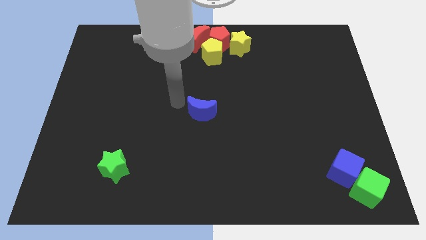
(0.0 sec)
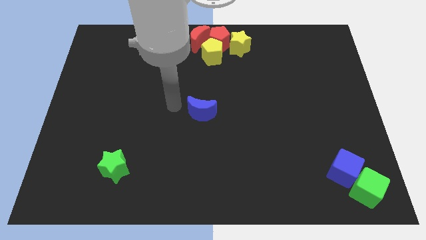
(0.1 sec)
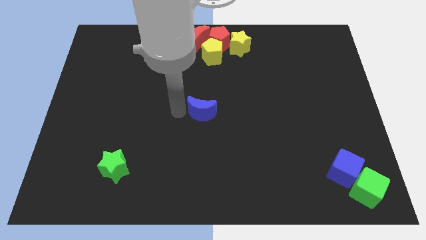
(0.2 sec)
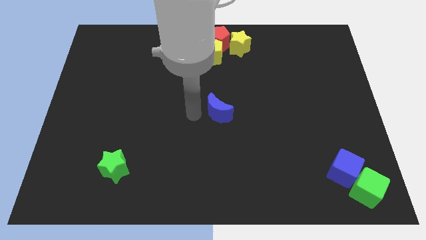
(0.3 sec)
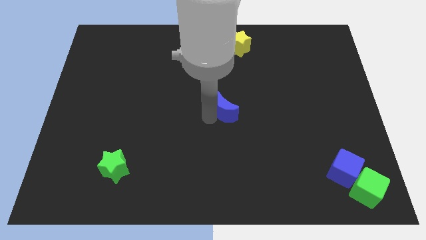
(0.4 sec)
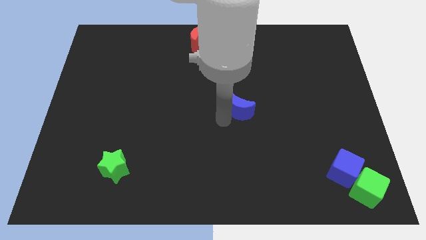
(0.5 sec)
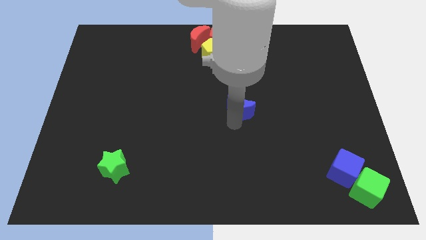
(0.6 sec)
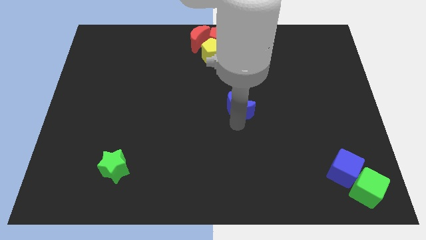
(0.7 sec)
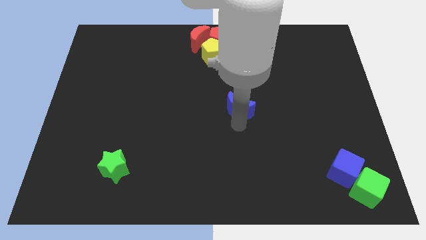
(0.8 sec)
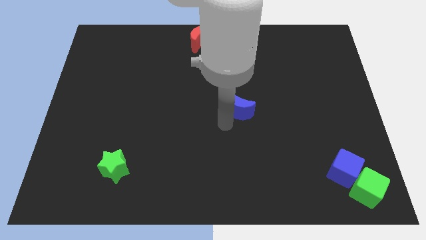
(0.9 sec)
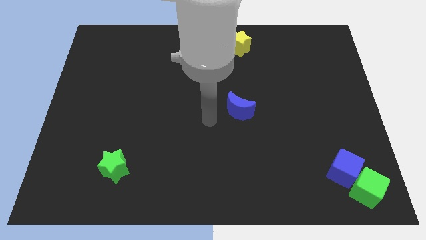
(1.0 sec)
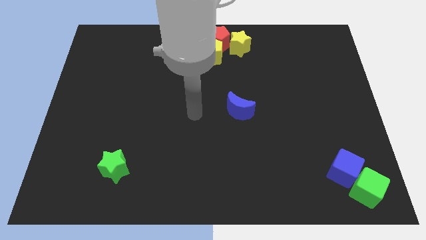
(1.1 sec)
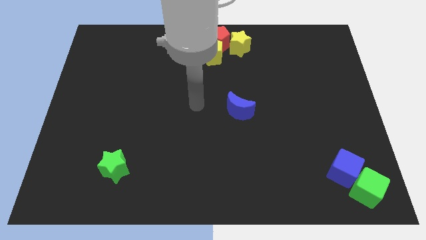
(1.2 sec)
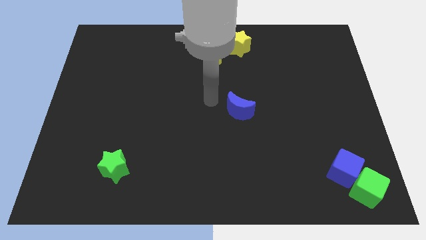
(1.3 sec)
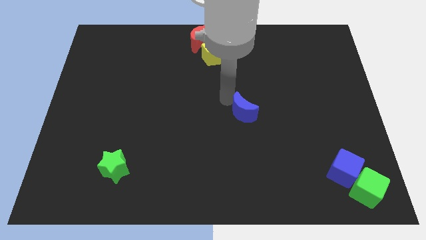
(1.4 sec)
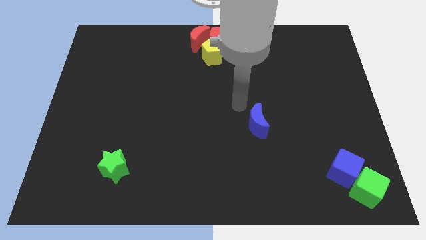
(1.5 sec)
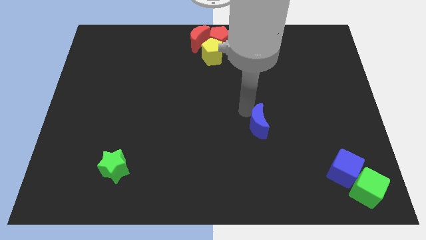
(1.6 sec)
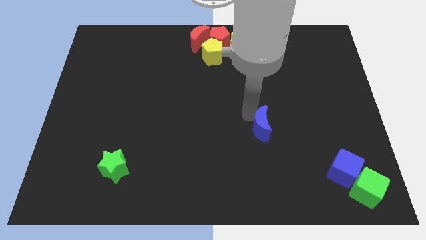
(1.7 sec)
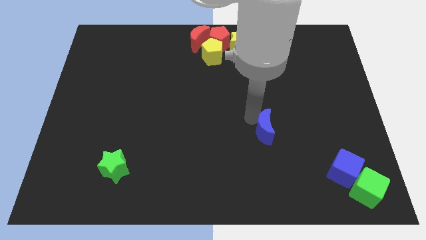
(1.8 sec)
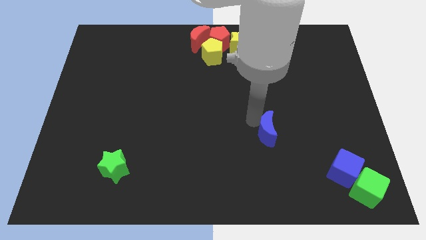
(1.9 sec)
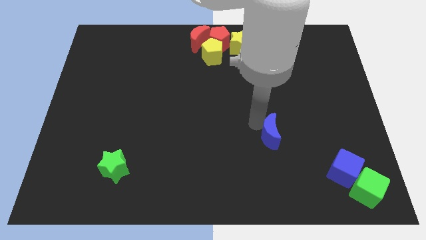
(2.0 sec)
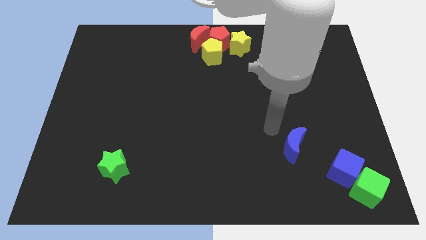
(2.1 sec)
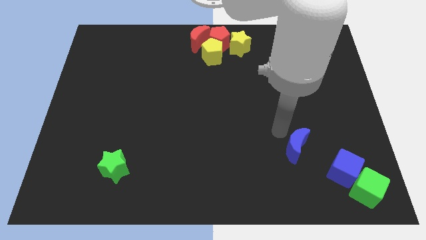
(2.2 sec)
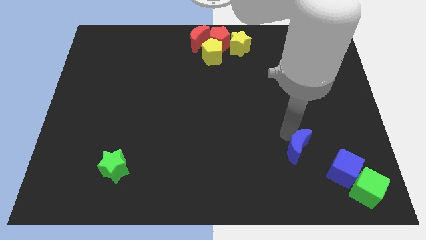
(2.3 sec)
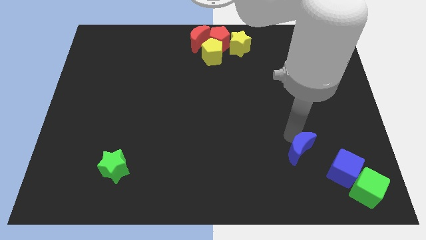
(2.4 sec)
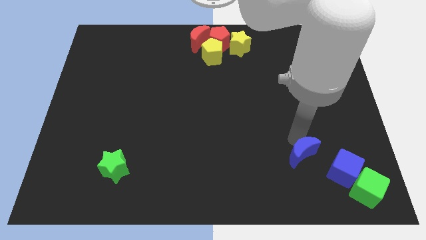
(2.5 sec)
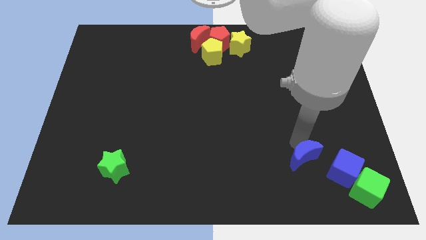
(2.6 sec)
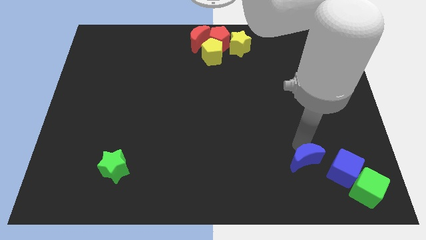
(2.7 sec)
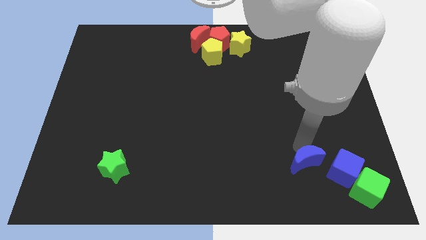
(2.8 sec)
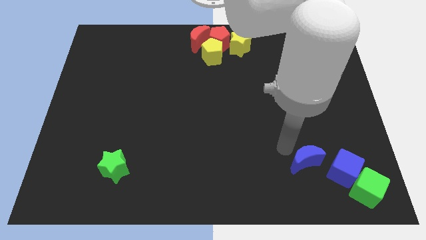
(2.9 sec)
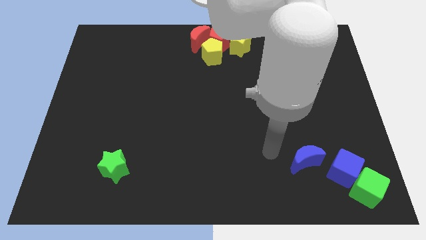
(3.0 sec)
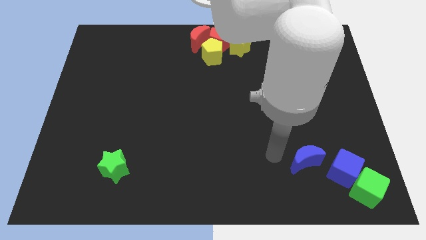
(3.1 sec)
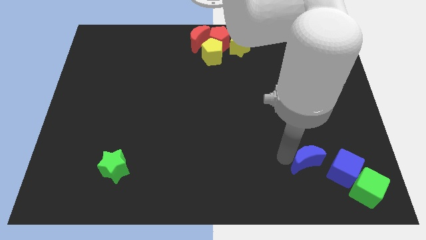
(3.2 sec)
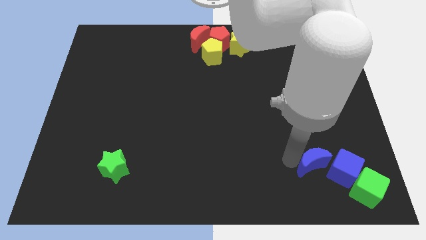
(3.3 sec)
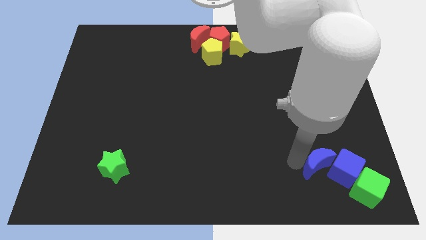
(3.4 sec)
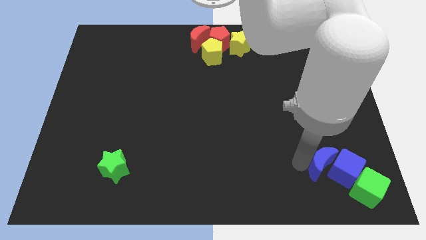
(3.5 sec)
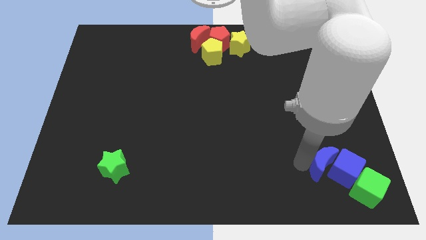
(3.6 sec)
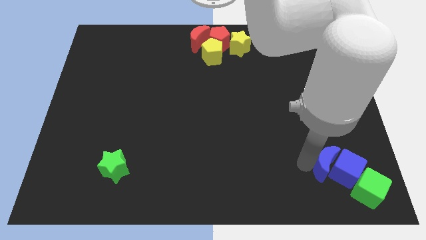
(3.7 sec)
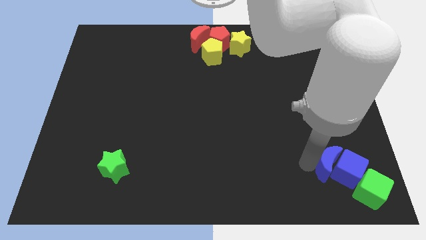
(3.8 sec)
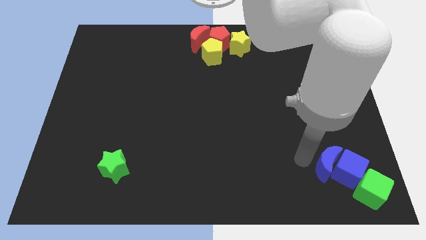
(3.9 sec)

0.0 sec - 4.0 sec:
slide the blue moon into the blue cube

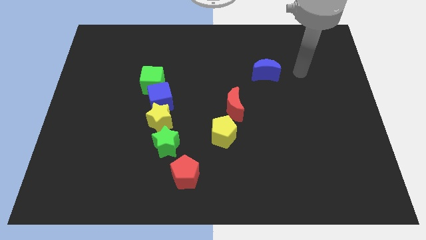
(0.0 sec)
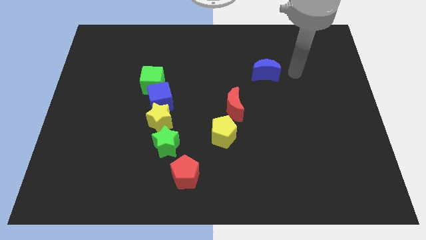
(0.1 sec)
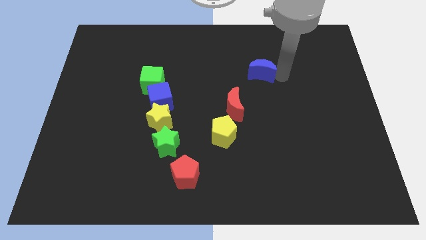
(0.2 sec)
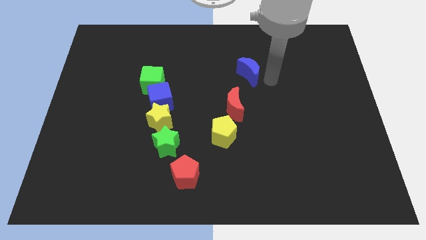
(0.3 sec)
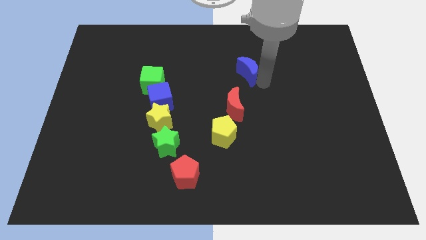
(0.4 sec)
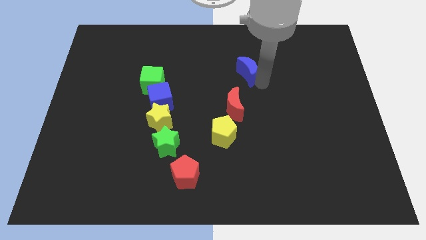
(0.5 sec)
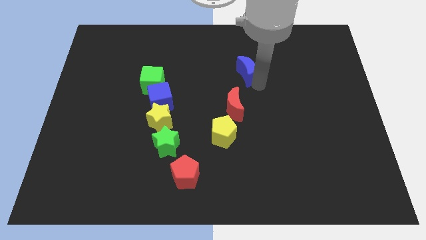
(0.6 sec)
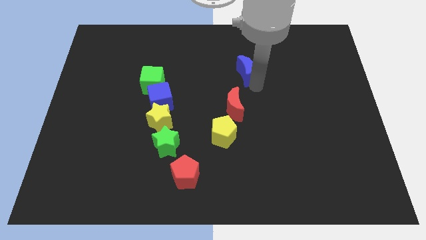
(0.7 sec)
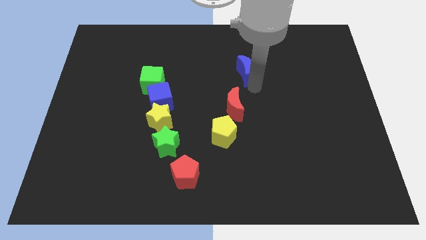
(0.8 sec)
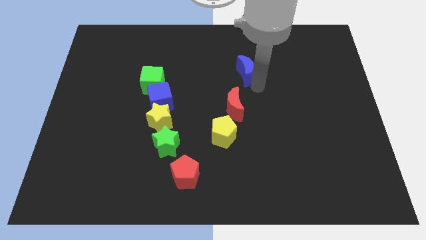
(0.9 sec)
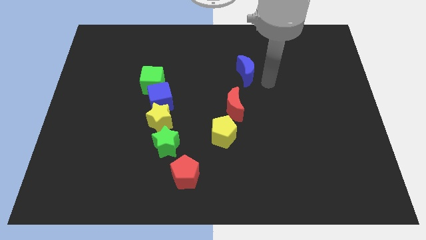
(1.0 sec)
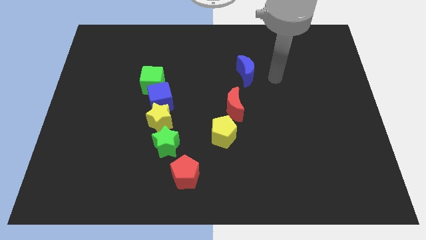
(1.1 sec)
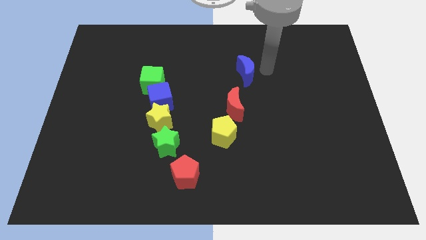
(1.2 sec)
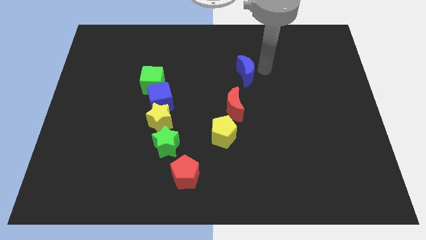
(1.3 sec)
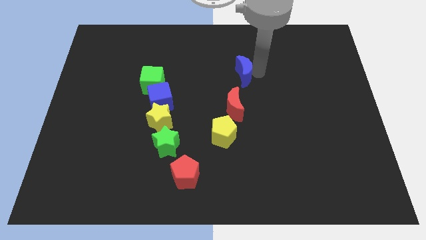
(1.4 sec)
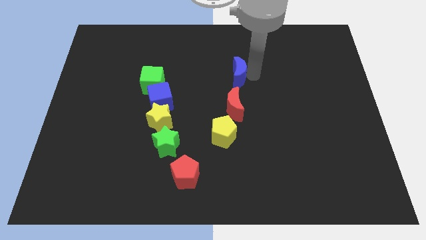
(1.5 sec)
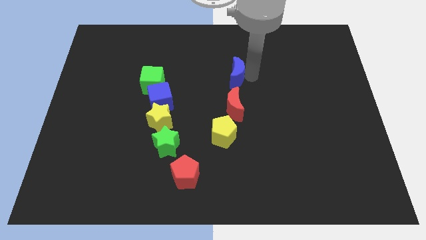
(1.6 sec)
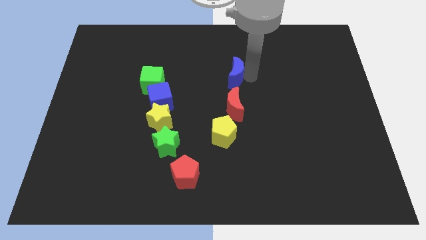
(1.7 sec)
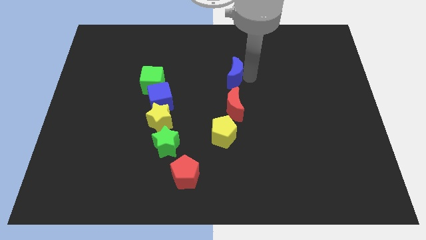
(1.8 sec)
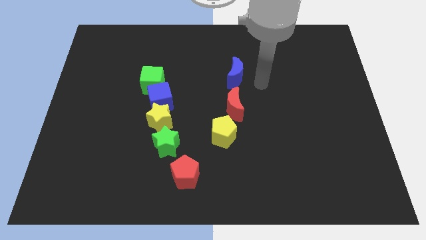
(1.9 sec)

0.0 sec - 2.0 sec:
place the blue moon above the red moon

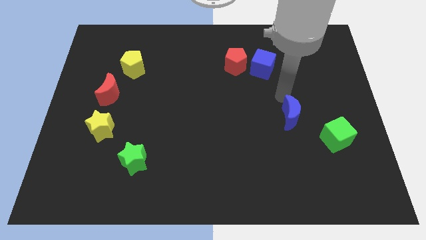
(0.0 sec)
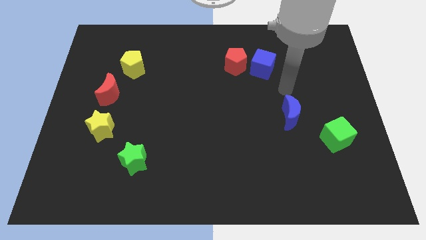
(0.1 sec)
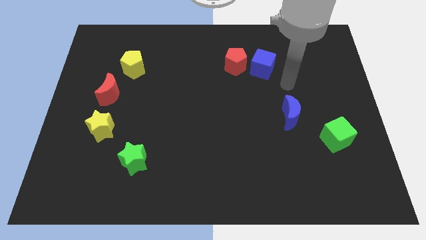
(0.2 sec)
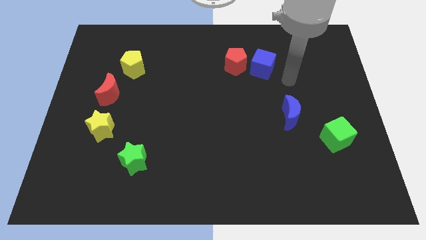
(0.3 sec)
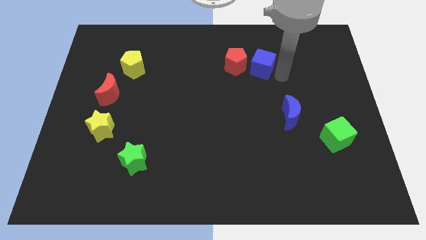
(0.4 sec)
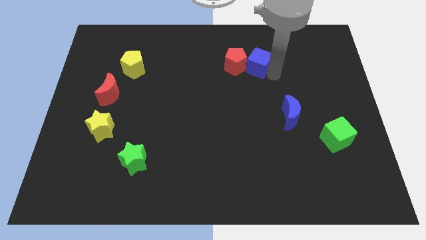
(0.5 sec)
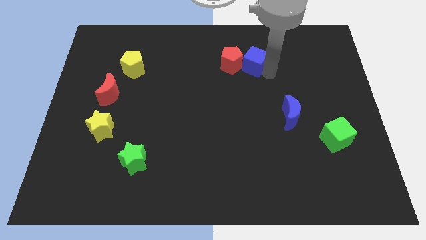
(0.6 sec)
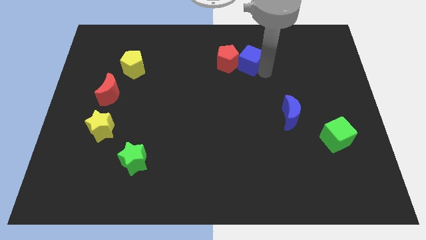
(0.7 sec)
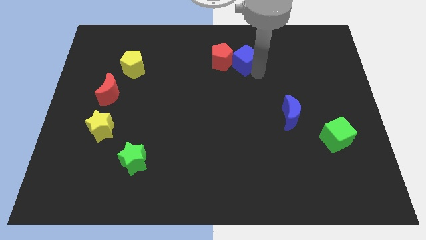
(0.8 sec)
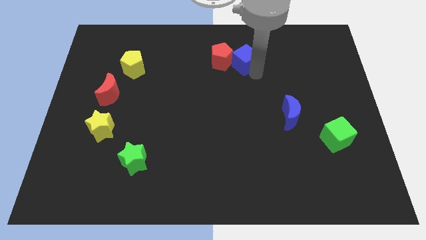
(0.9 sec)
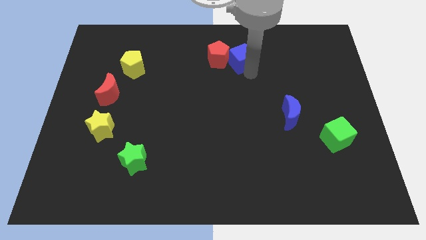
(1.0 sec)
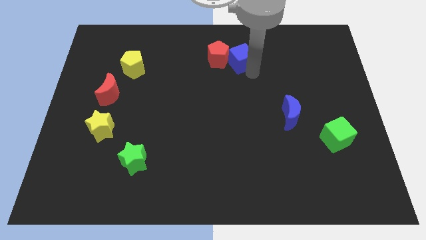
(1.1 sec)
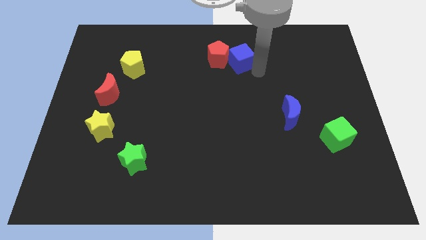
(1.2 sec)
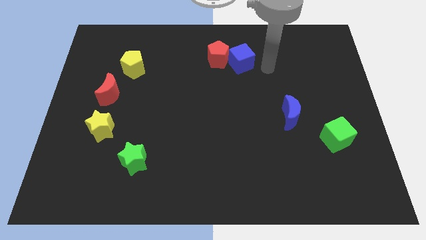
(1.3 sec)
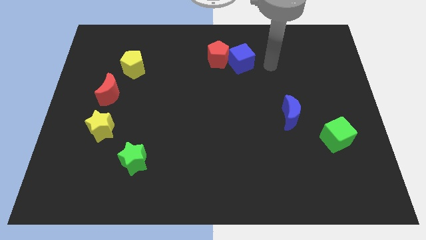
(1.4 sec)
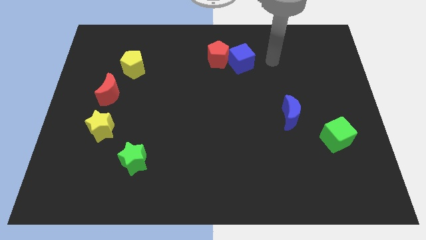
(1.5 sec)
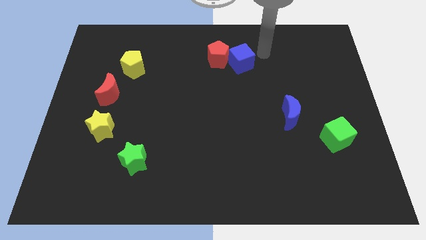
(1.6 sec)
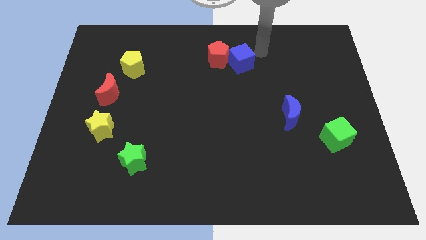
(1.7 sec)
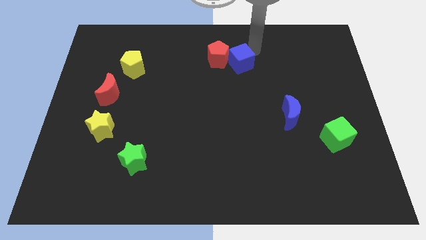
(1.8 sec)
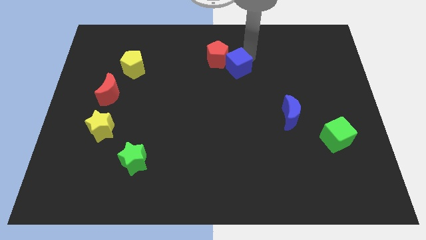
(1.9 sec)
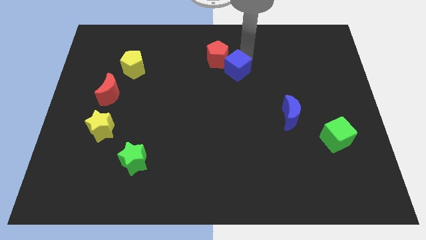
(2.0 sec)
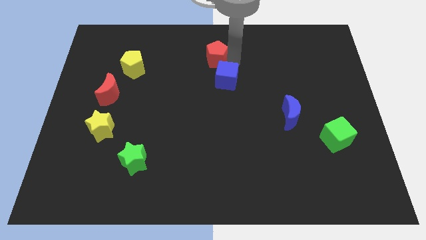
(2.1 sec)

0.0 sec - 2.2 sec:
push blue cube and red pentagon slightly towards the left

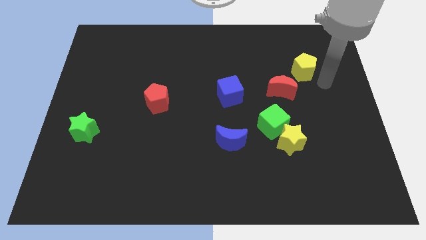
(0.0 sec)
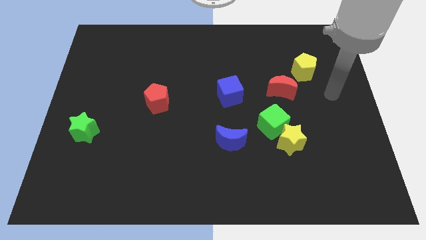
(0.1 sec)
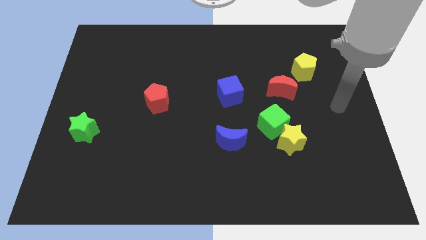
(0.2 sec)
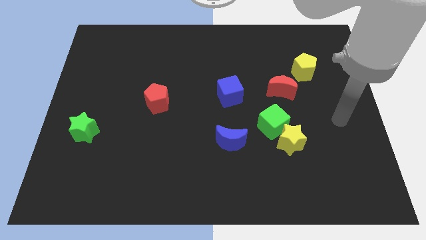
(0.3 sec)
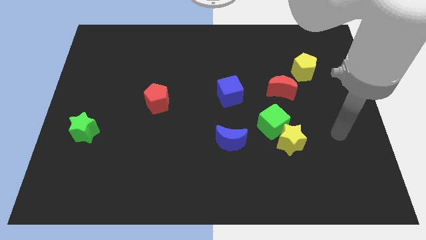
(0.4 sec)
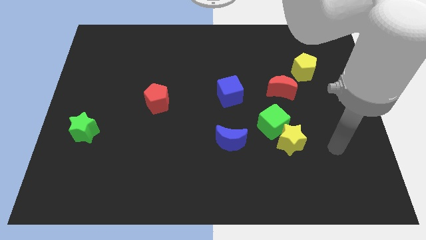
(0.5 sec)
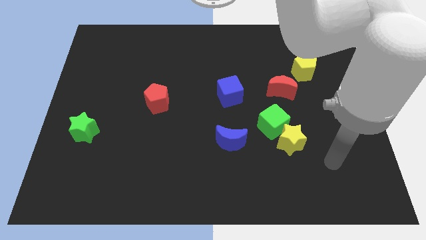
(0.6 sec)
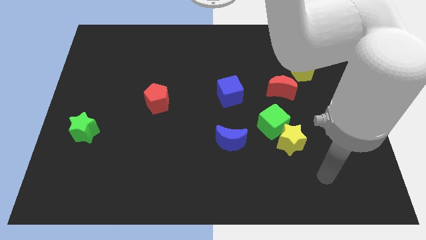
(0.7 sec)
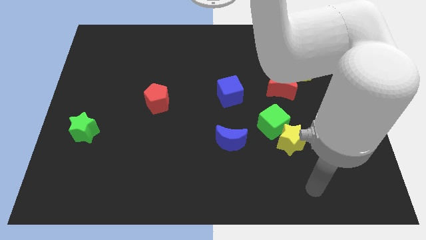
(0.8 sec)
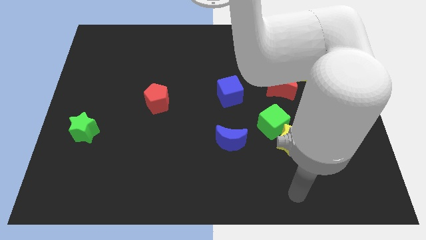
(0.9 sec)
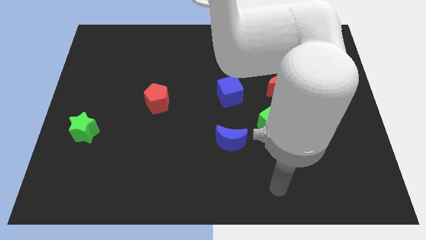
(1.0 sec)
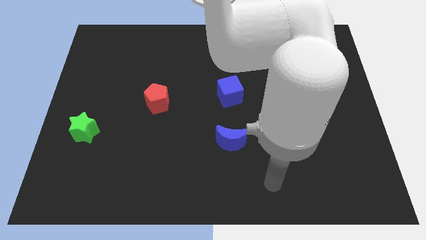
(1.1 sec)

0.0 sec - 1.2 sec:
move your hand towards the yellow star
